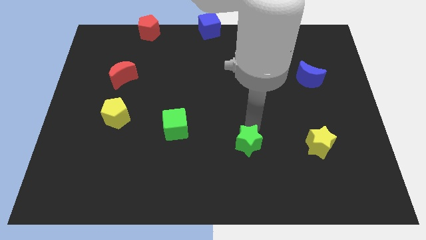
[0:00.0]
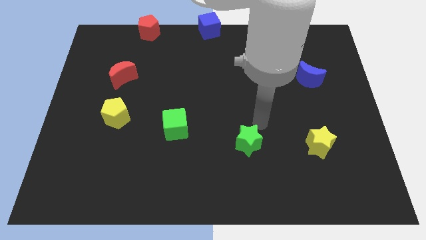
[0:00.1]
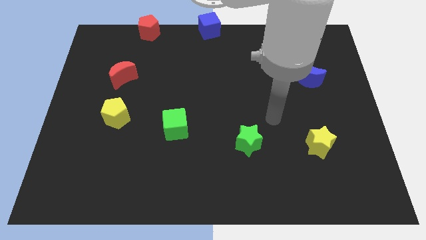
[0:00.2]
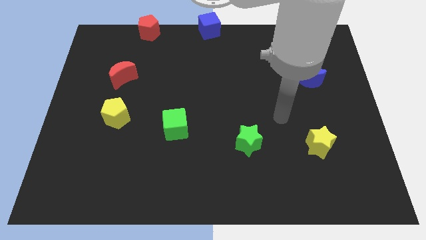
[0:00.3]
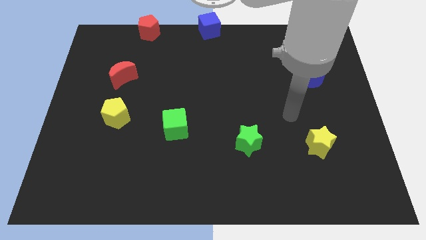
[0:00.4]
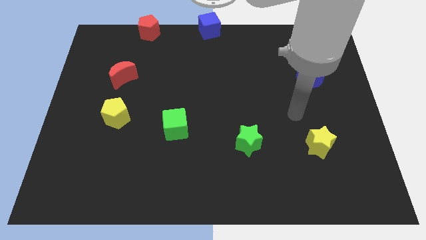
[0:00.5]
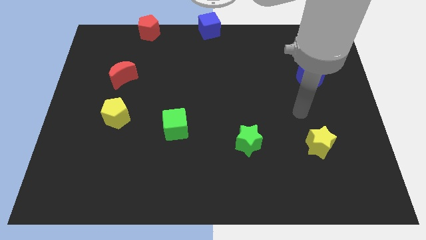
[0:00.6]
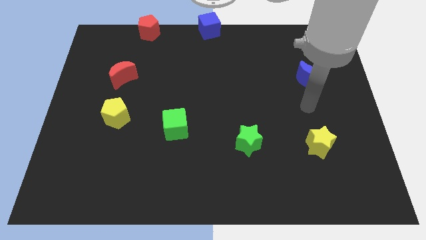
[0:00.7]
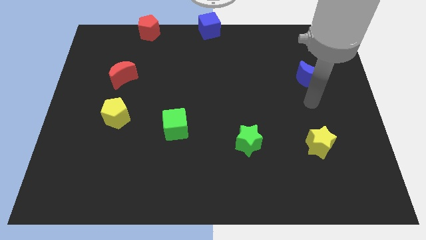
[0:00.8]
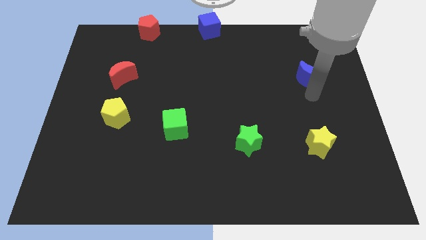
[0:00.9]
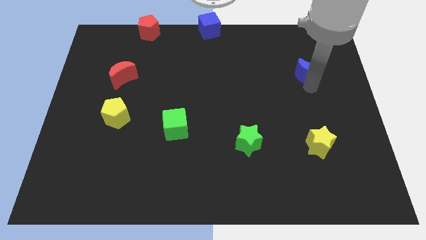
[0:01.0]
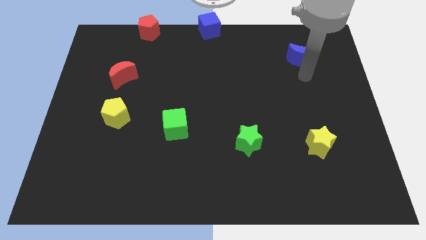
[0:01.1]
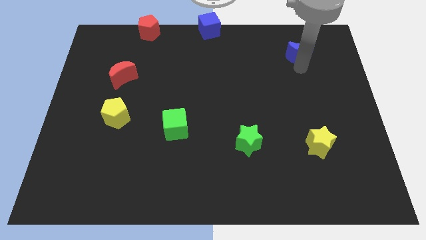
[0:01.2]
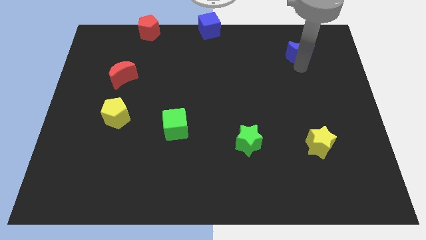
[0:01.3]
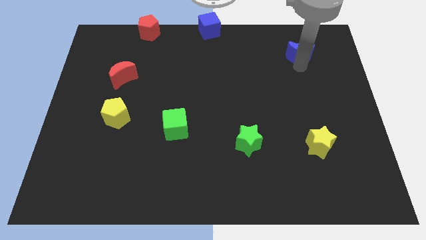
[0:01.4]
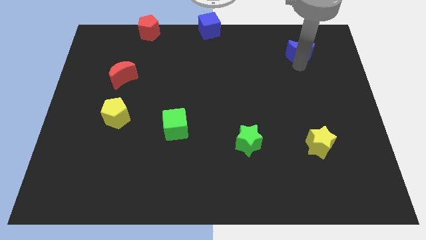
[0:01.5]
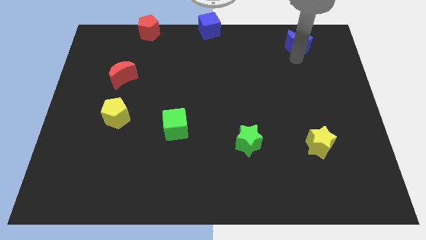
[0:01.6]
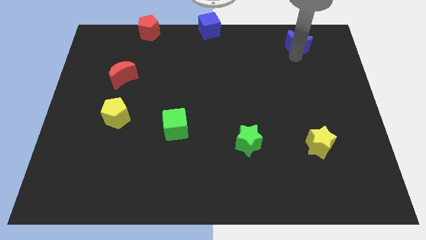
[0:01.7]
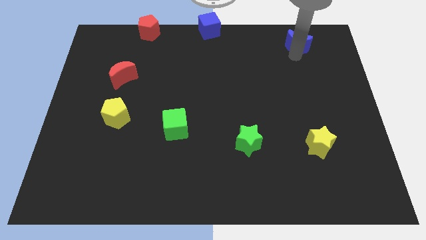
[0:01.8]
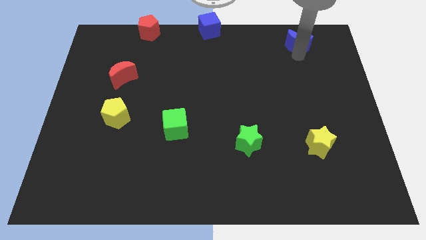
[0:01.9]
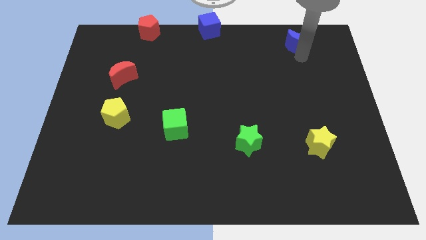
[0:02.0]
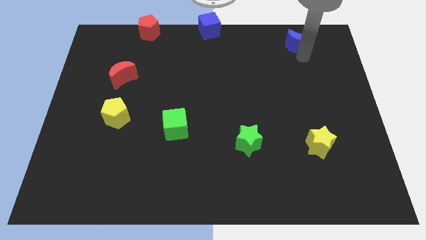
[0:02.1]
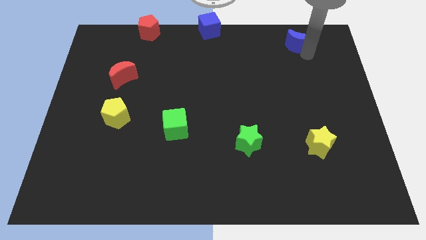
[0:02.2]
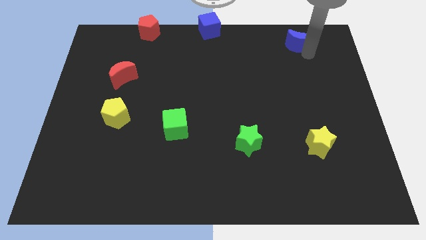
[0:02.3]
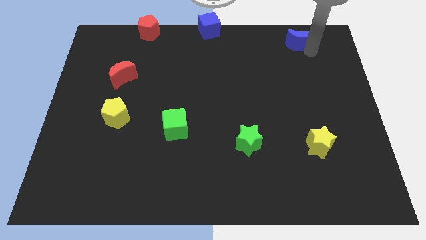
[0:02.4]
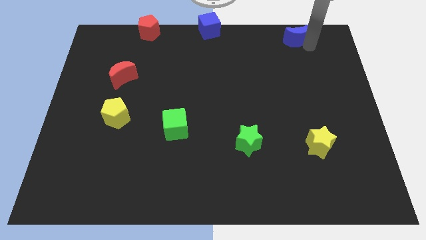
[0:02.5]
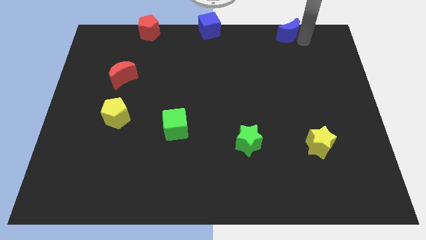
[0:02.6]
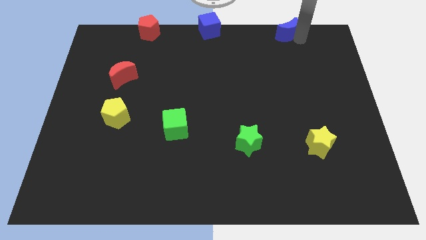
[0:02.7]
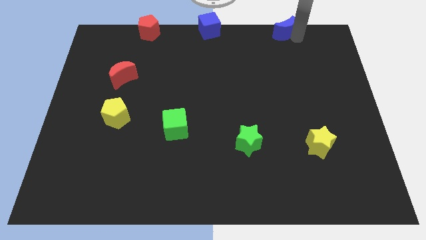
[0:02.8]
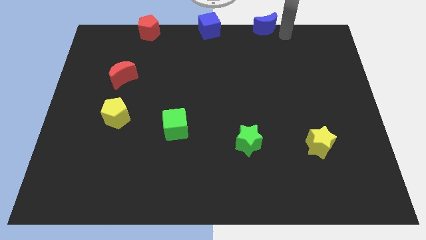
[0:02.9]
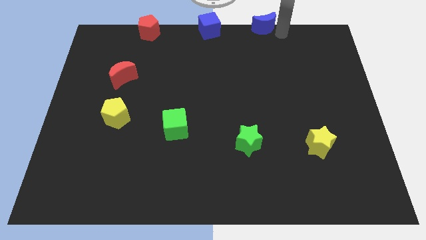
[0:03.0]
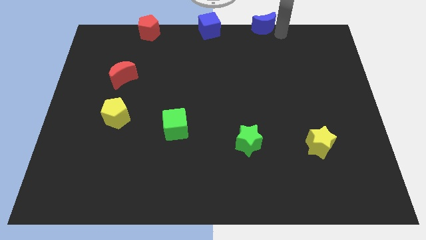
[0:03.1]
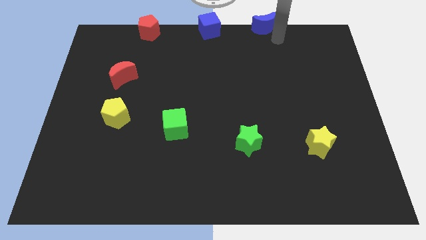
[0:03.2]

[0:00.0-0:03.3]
move the blue moon to the right of blue cube

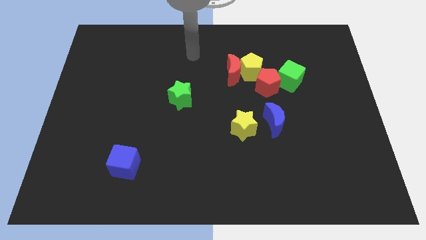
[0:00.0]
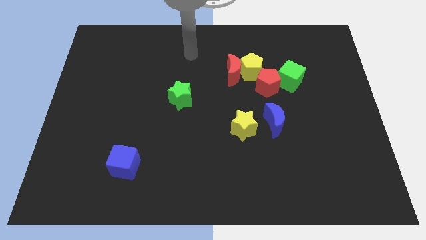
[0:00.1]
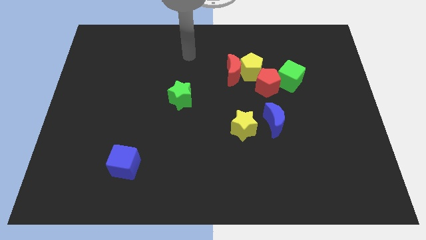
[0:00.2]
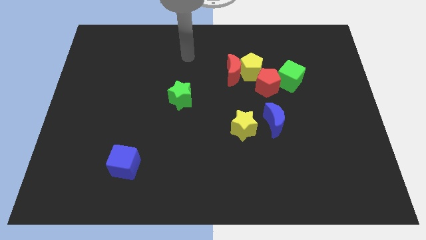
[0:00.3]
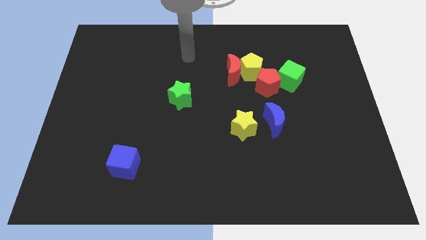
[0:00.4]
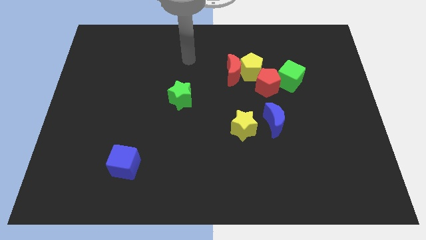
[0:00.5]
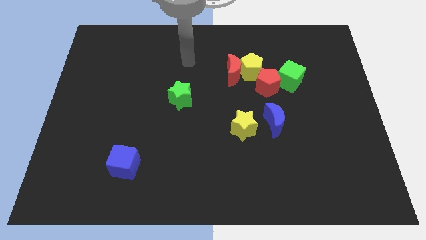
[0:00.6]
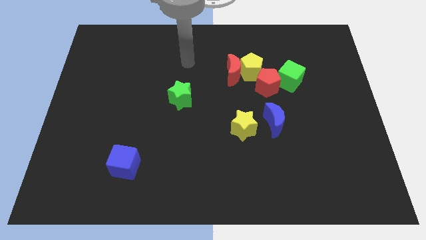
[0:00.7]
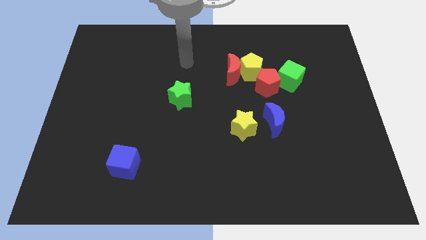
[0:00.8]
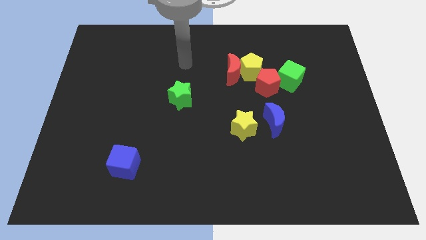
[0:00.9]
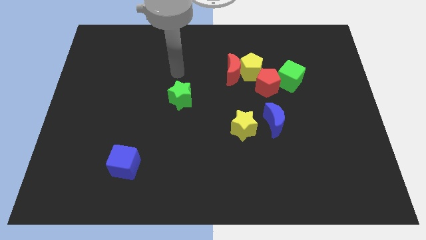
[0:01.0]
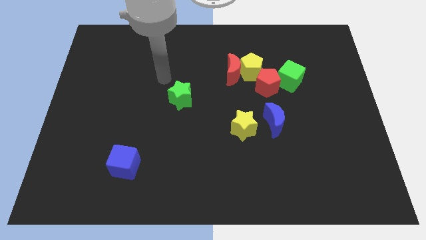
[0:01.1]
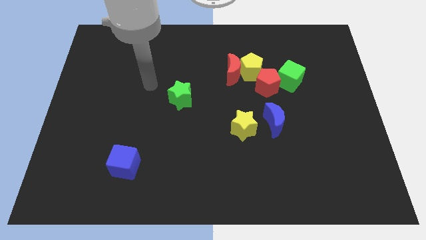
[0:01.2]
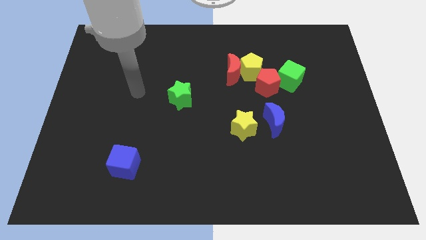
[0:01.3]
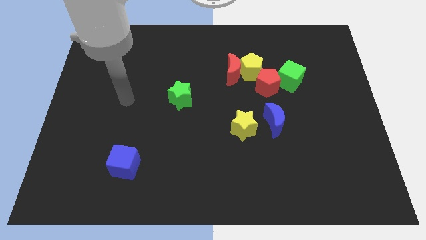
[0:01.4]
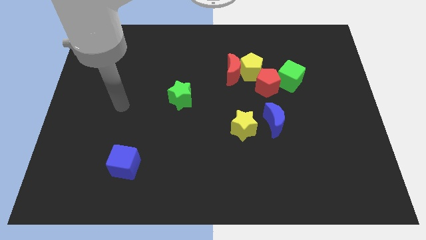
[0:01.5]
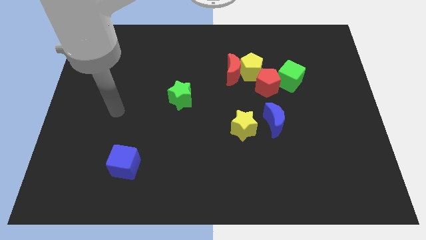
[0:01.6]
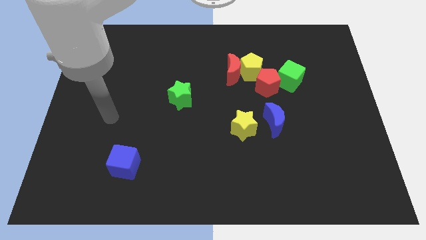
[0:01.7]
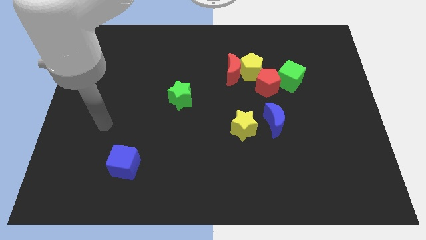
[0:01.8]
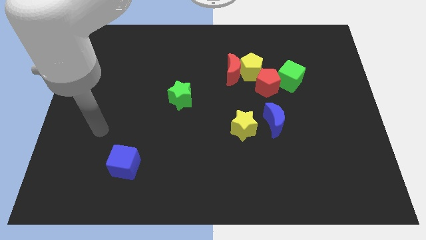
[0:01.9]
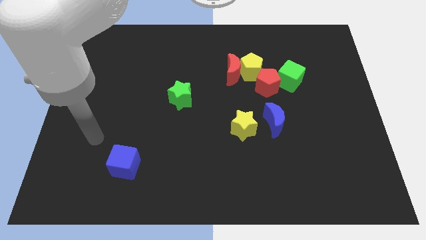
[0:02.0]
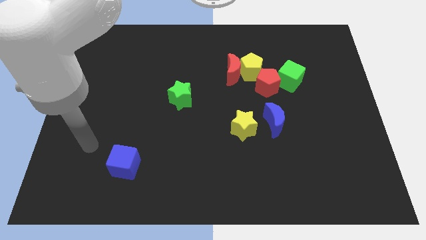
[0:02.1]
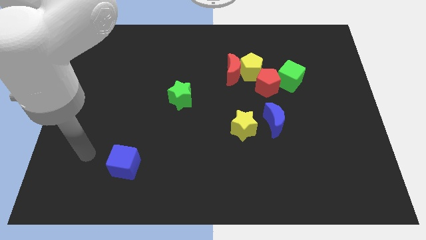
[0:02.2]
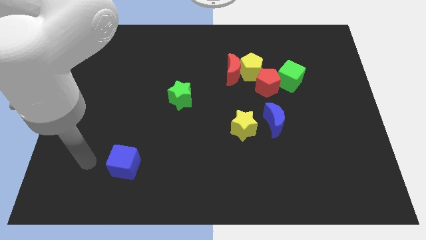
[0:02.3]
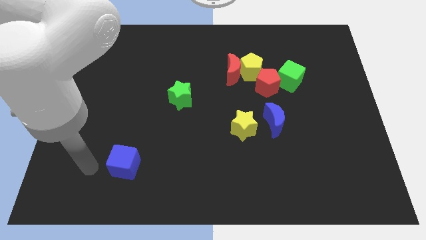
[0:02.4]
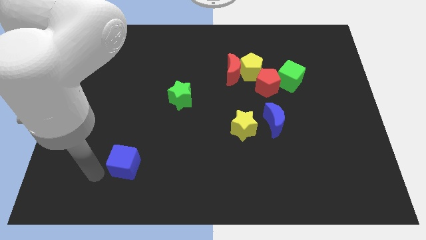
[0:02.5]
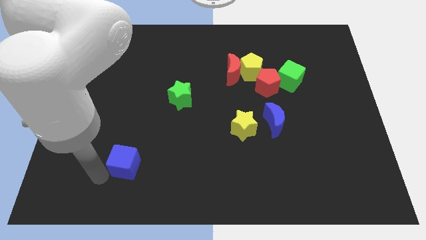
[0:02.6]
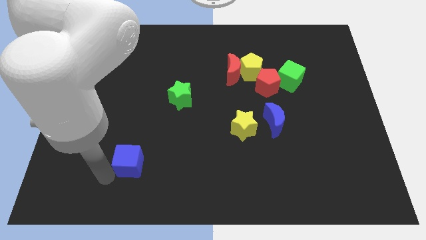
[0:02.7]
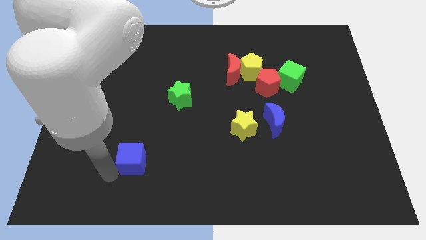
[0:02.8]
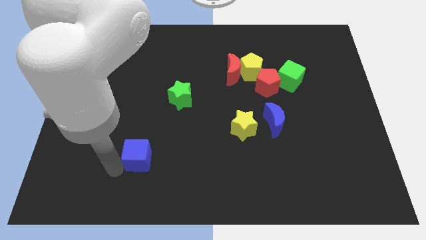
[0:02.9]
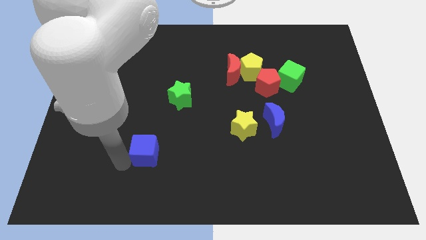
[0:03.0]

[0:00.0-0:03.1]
slightly move the blue cube to the top of the board

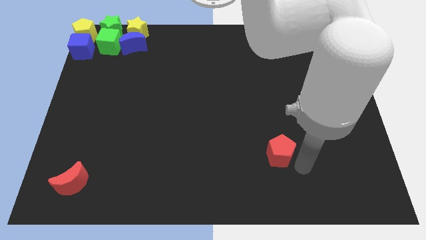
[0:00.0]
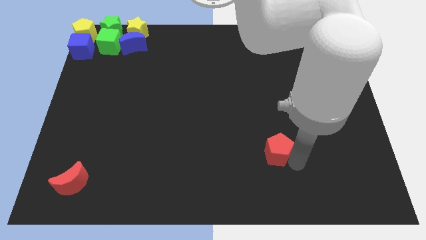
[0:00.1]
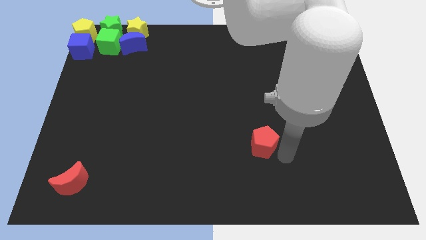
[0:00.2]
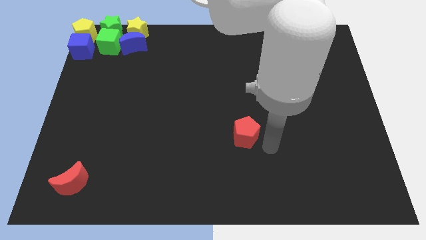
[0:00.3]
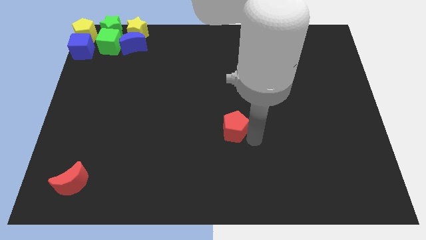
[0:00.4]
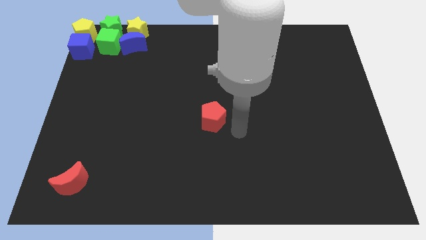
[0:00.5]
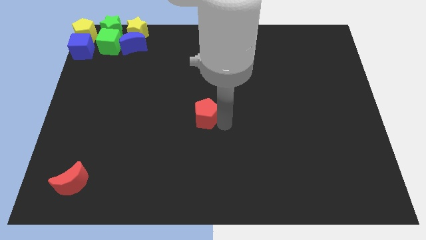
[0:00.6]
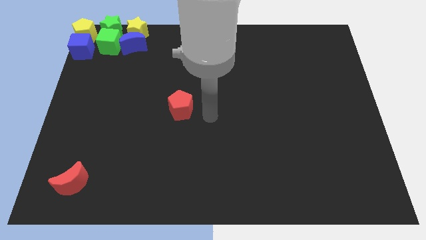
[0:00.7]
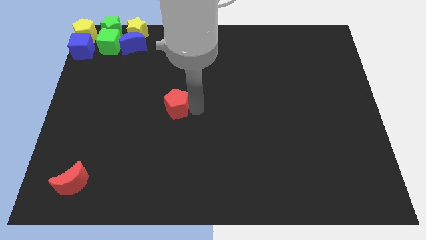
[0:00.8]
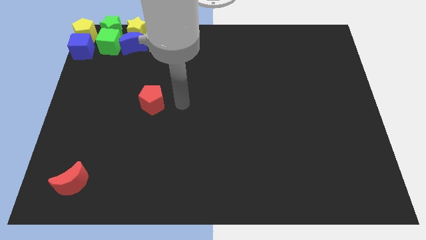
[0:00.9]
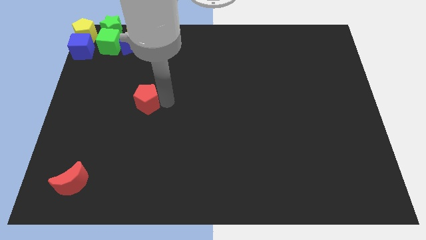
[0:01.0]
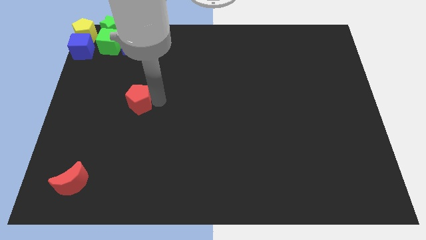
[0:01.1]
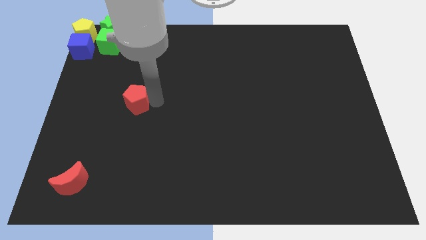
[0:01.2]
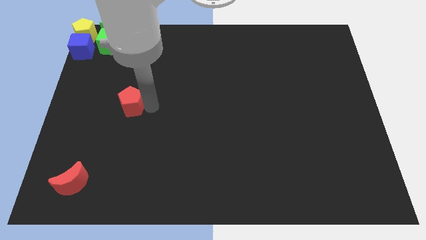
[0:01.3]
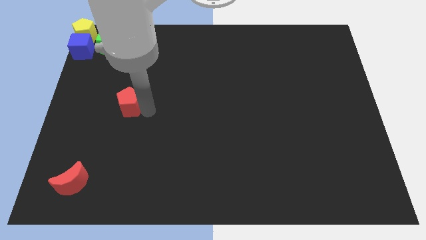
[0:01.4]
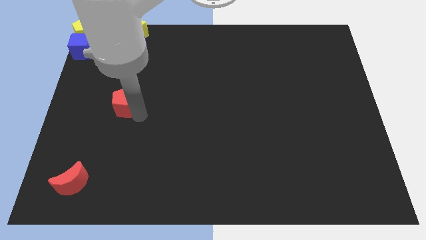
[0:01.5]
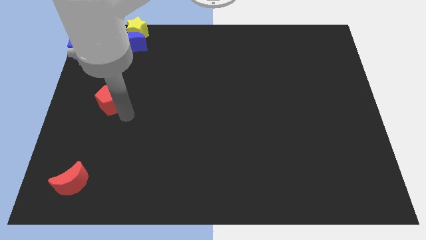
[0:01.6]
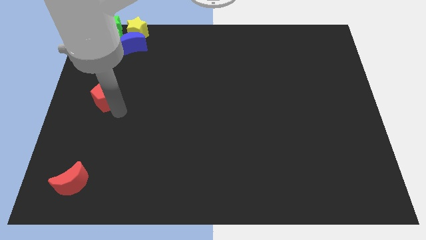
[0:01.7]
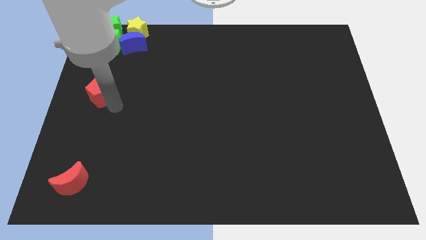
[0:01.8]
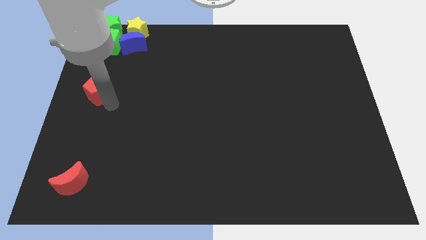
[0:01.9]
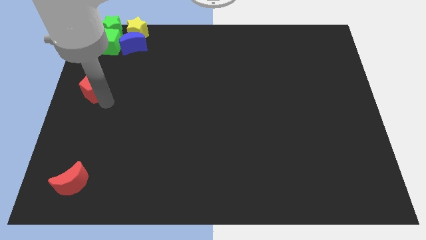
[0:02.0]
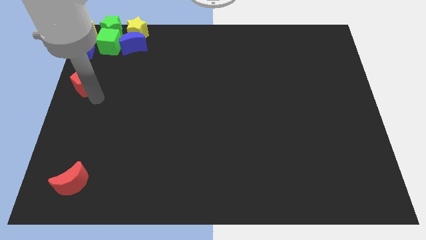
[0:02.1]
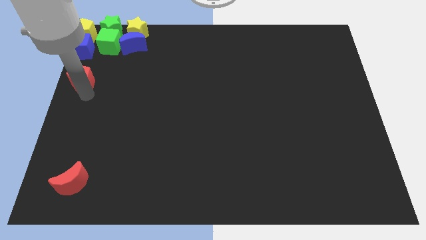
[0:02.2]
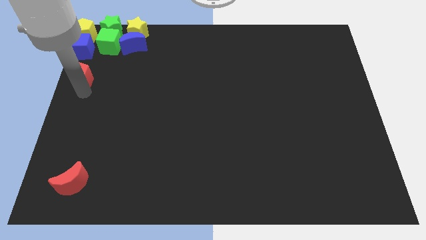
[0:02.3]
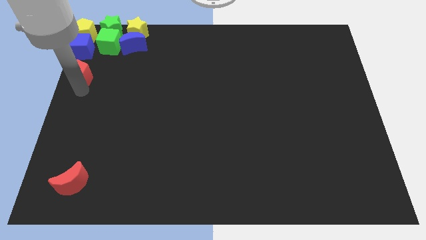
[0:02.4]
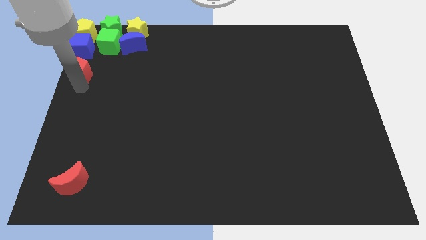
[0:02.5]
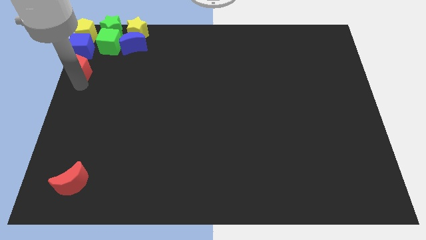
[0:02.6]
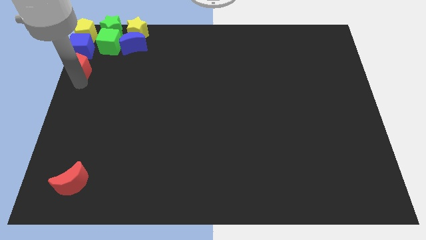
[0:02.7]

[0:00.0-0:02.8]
move the red pentagon to the bottom of the blue cube
